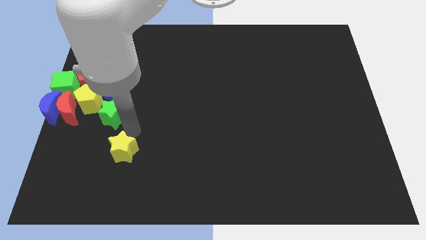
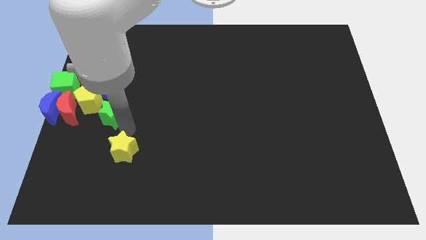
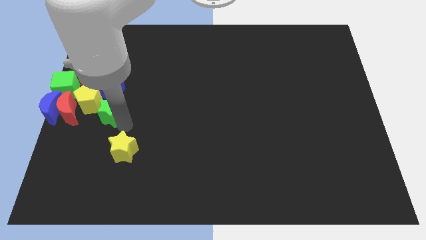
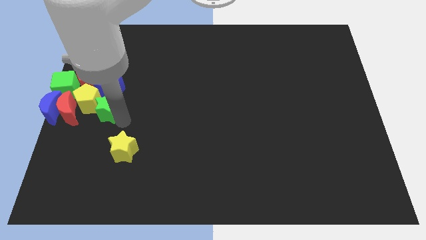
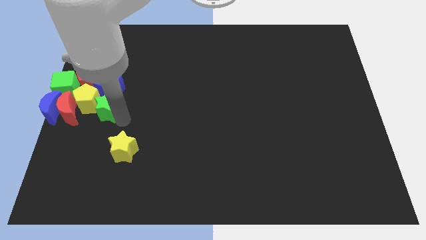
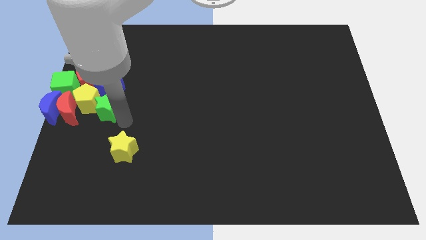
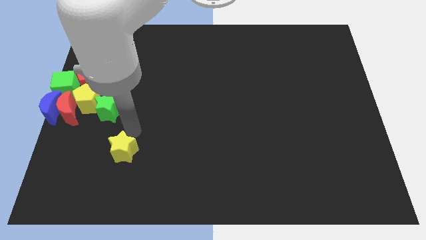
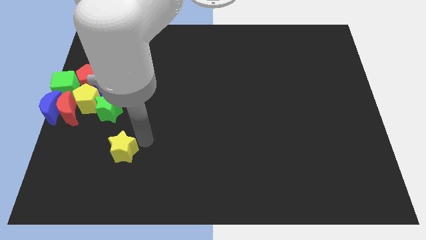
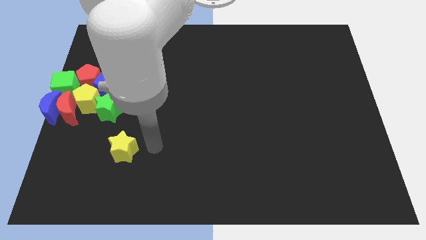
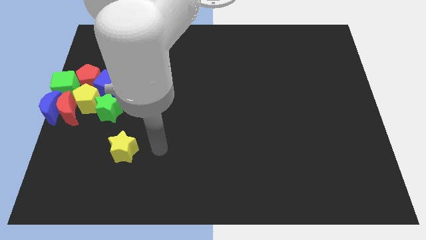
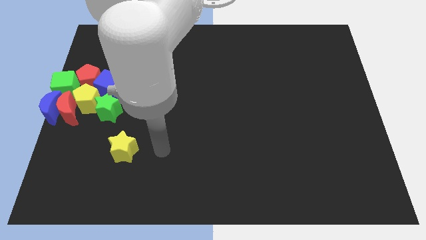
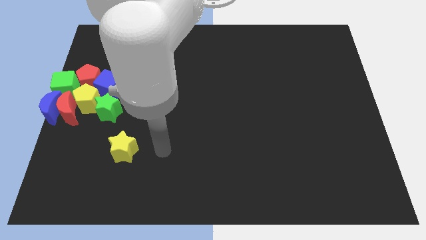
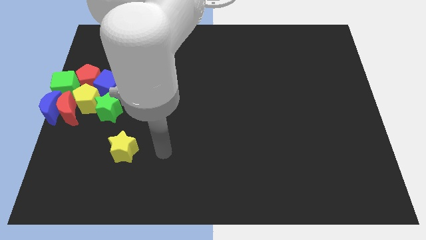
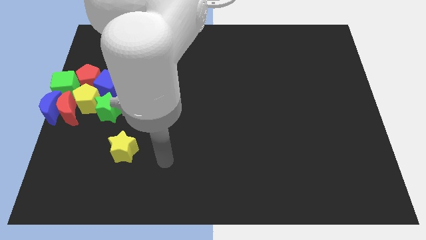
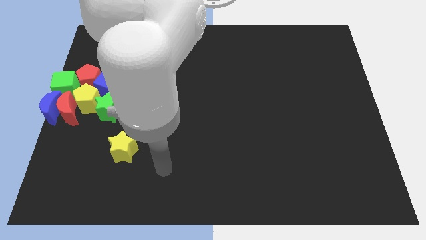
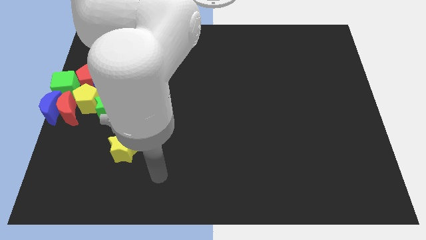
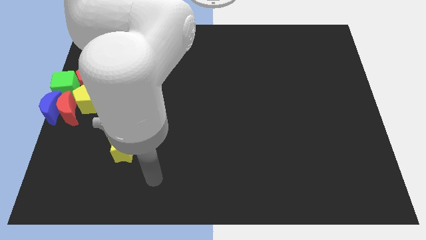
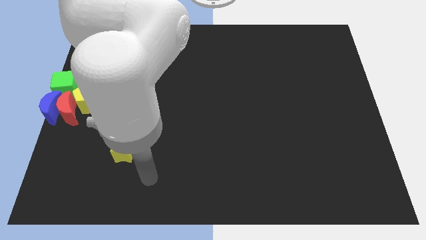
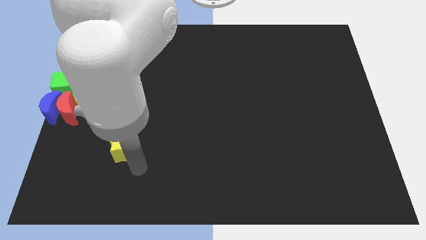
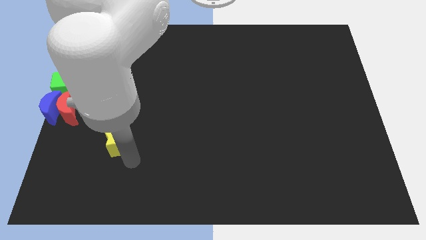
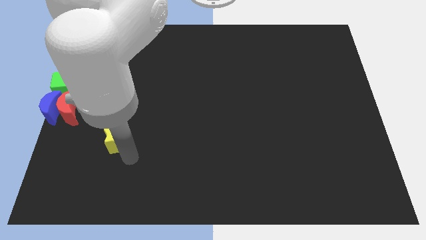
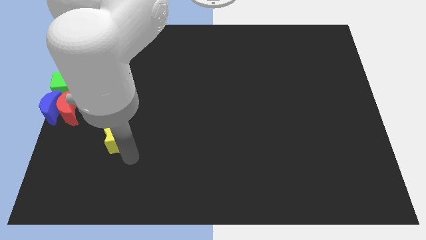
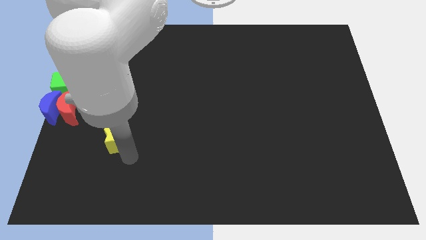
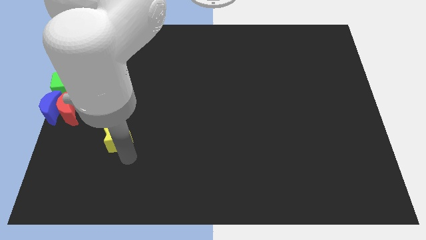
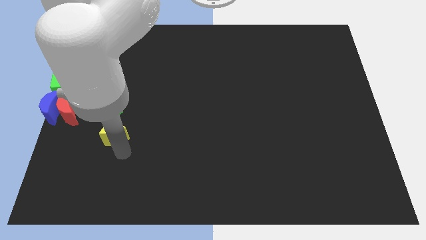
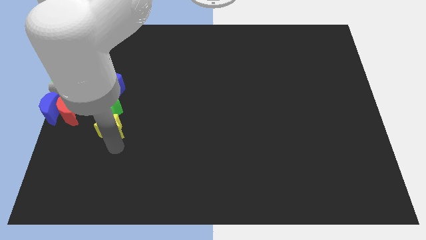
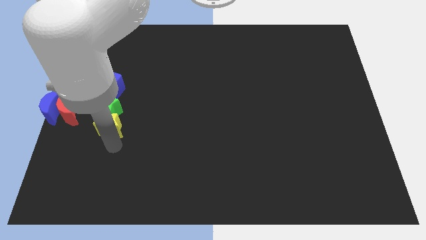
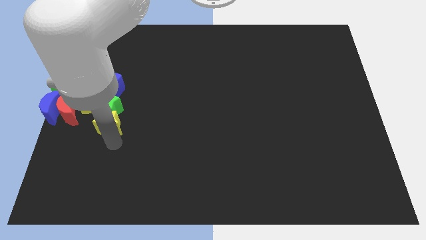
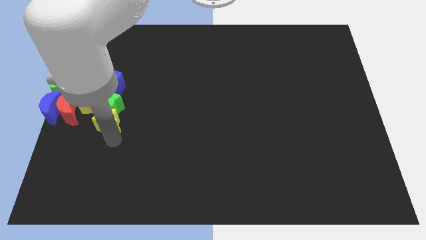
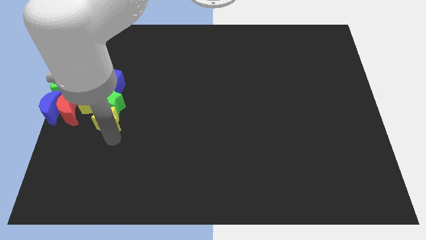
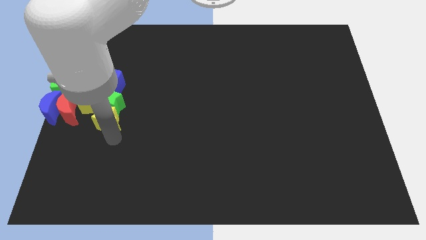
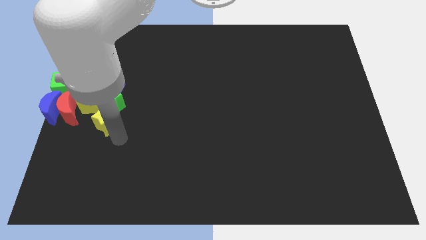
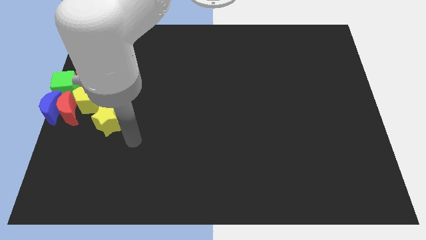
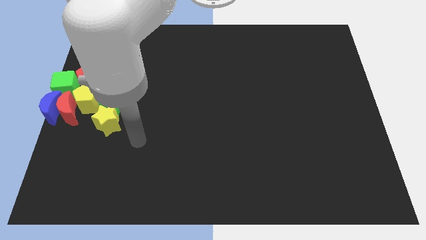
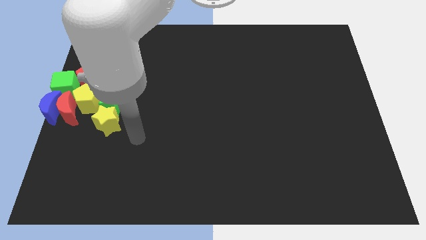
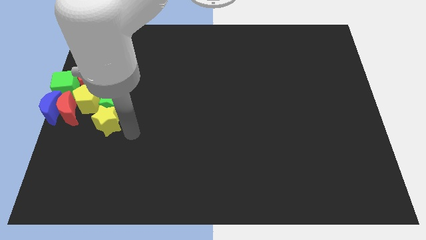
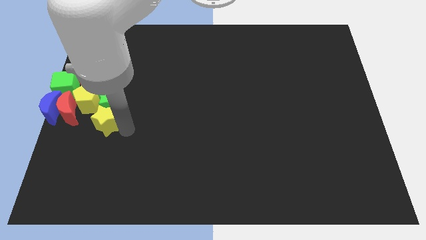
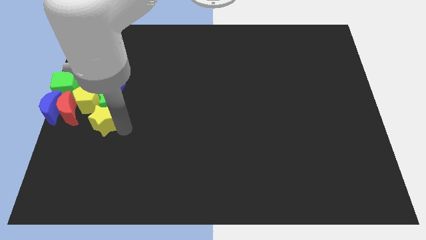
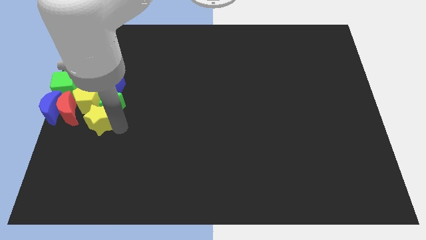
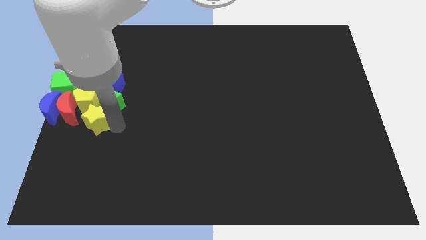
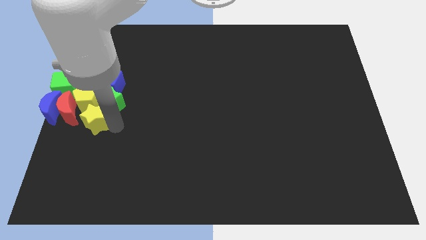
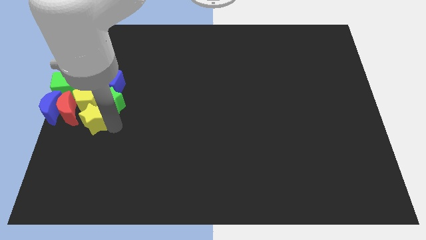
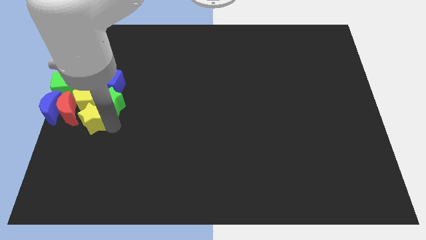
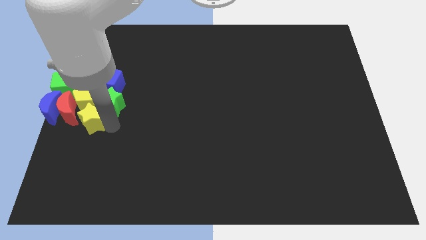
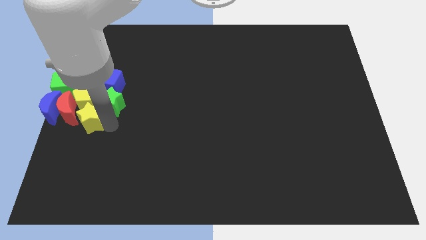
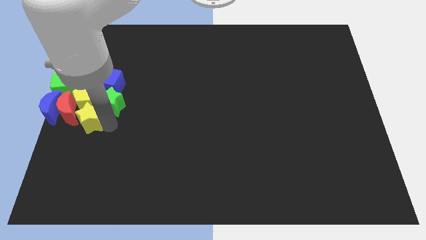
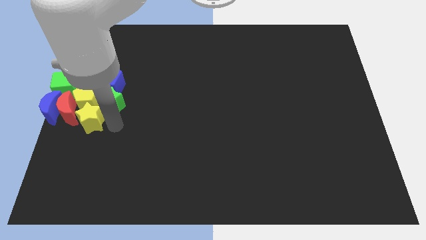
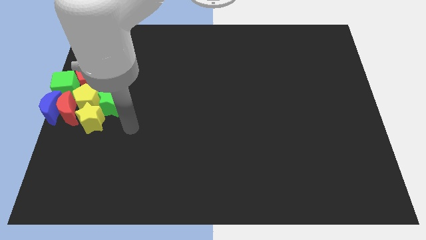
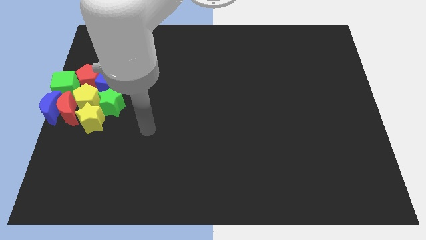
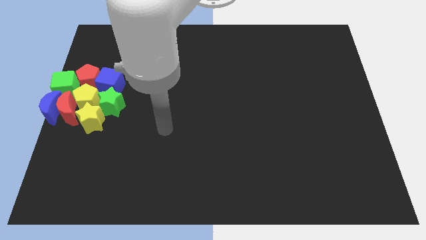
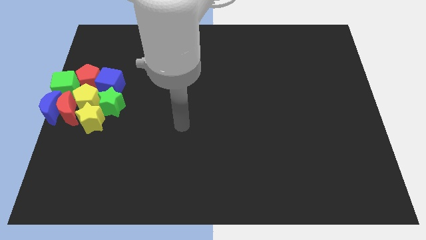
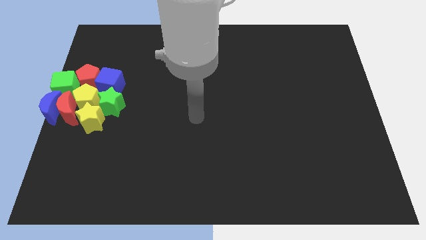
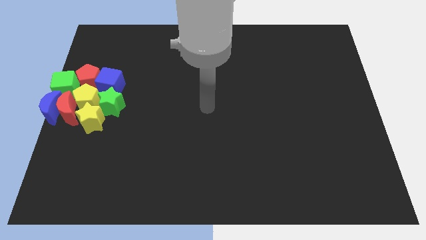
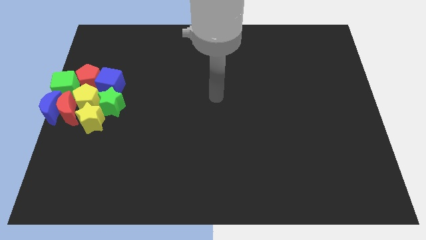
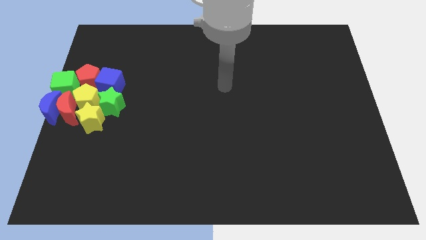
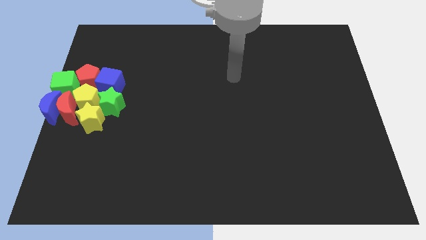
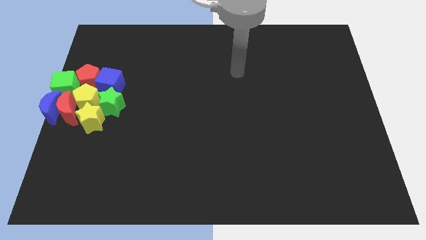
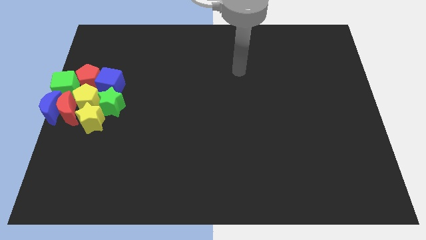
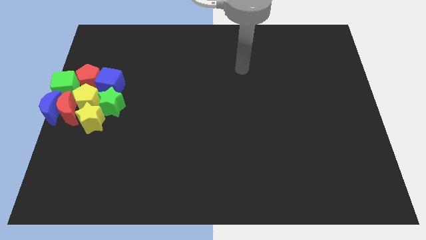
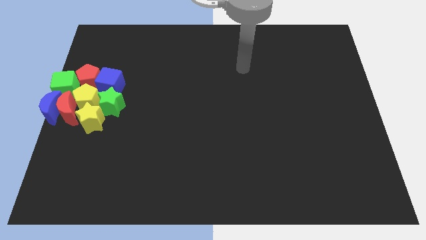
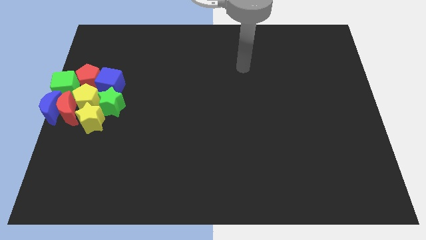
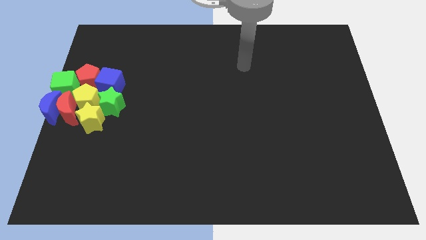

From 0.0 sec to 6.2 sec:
move the yellow star to the group of blocks

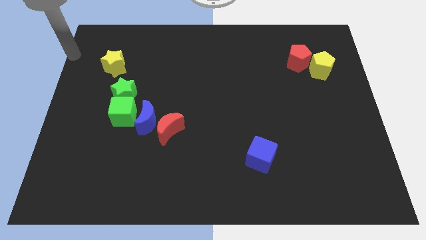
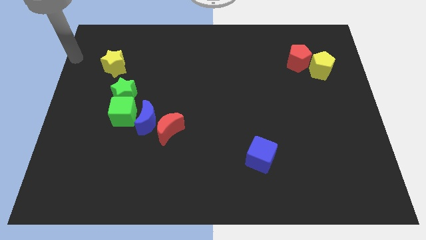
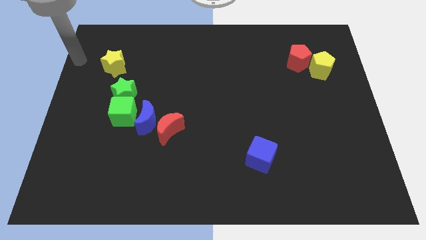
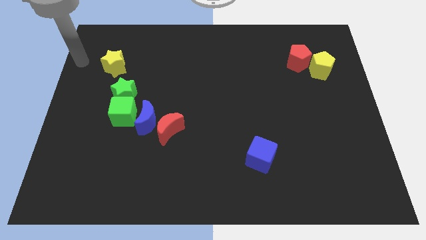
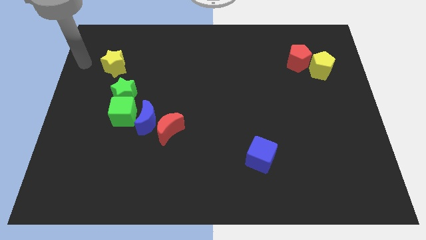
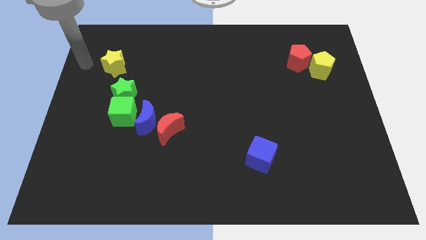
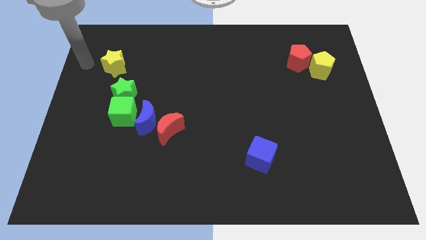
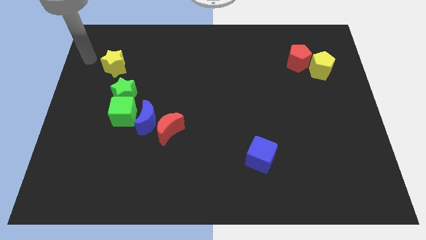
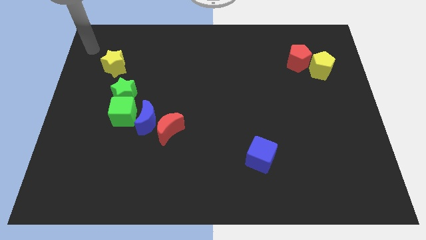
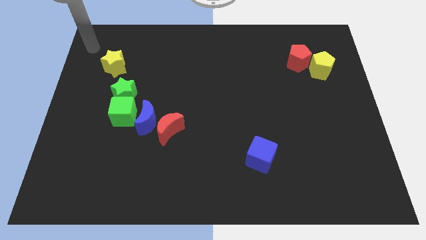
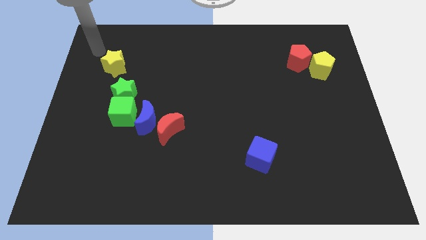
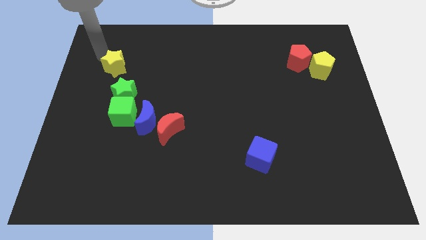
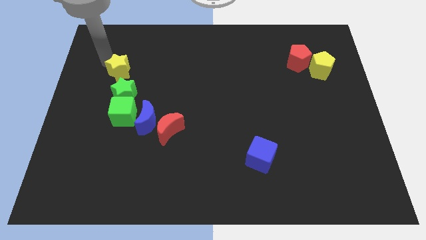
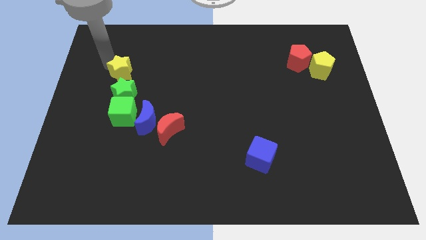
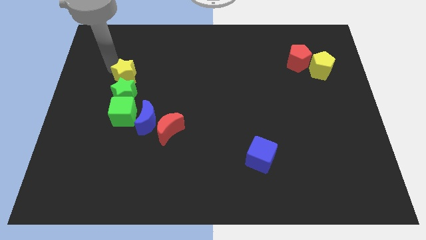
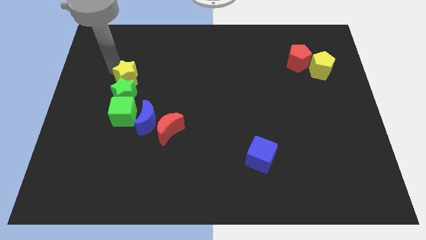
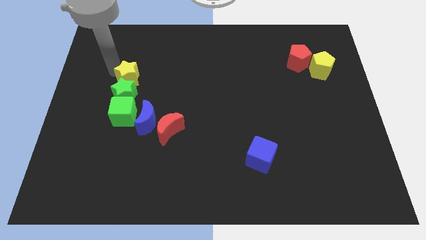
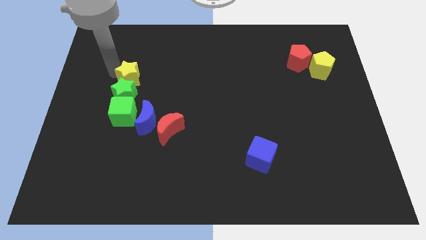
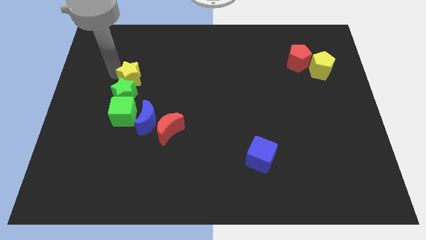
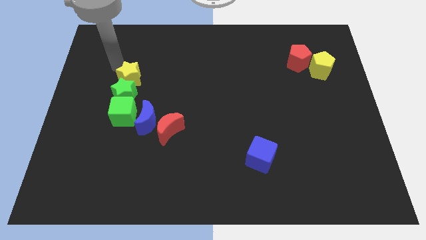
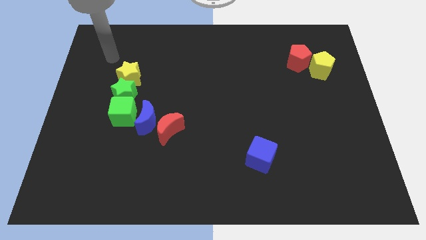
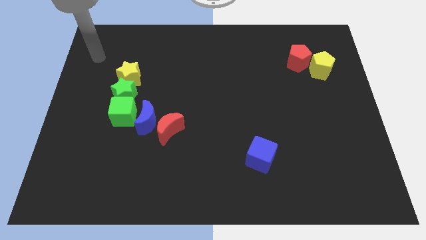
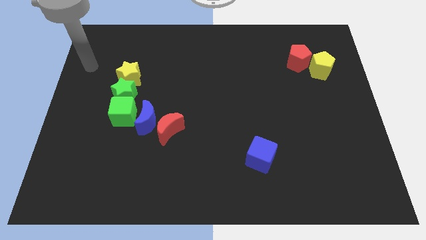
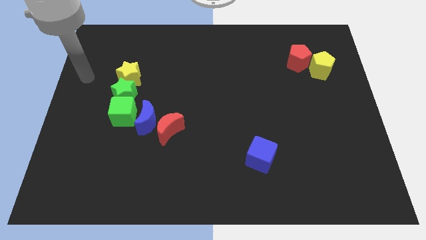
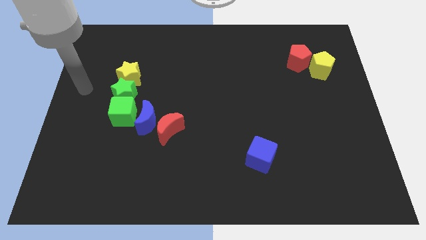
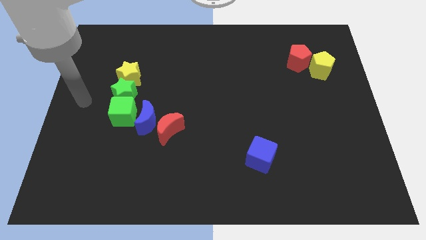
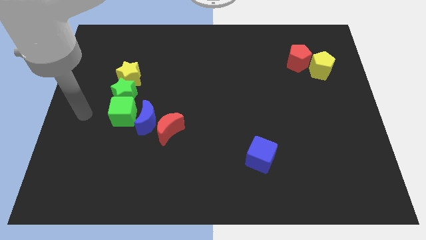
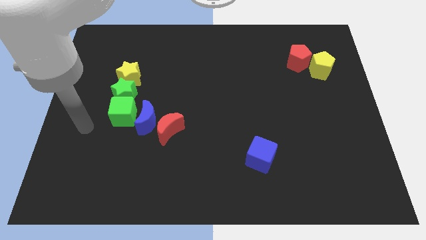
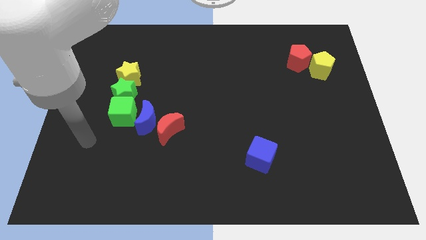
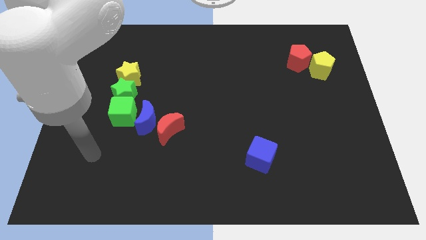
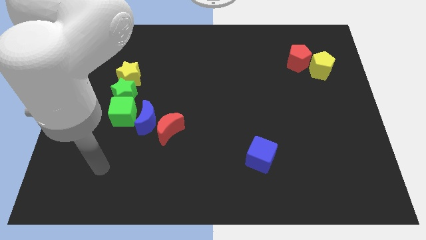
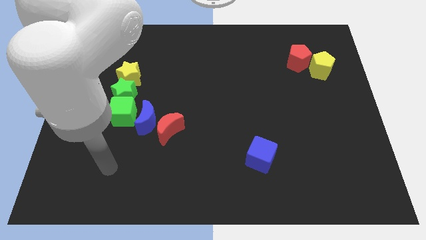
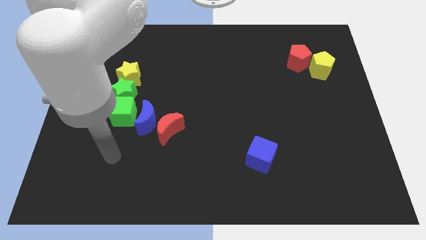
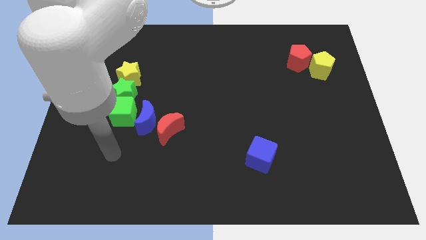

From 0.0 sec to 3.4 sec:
place the yellow star to the top side of the green star
